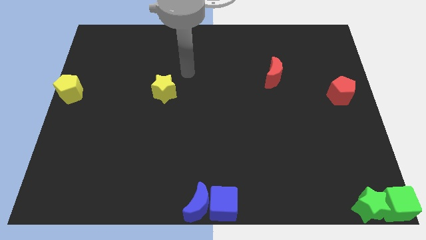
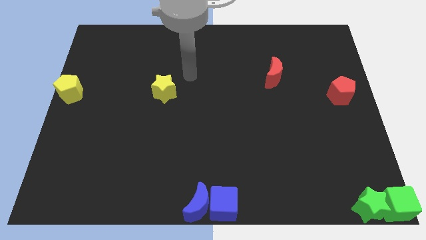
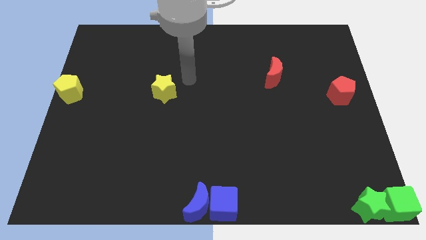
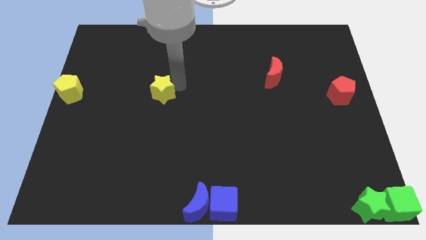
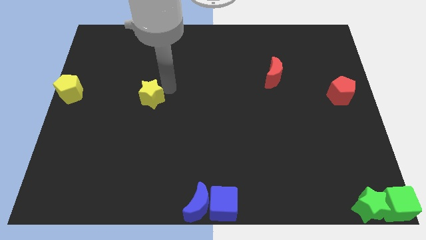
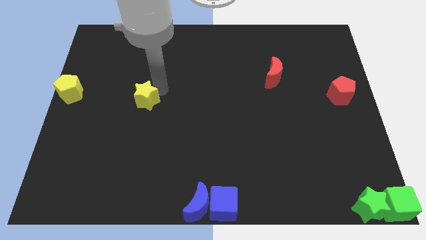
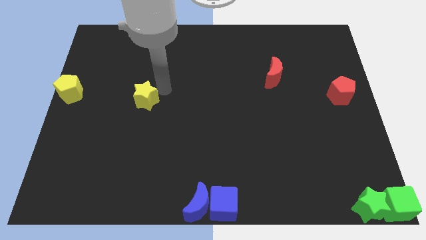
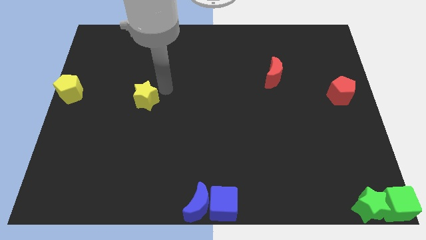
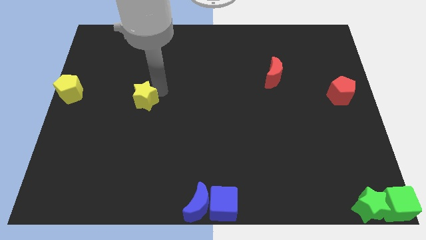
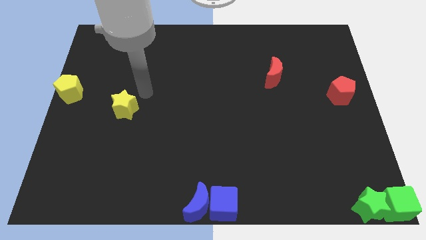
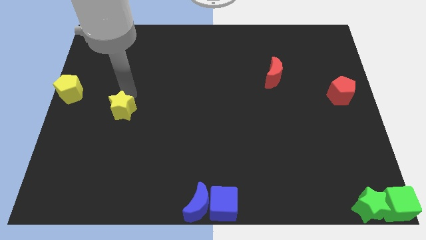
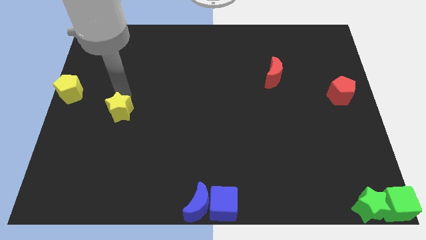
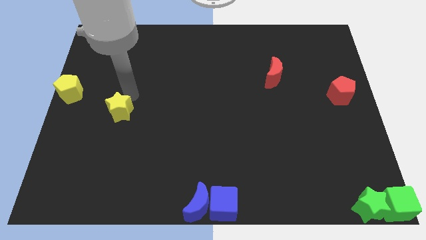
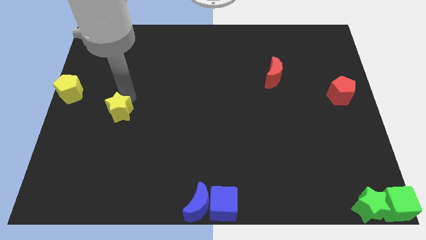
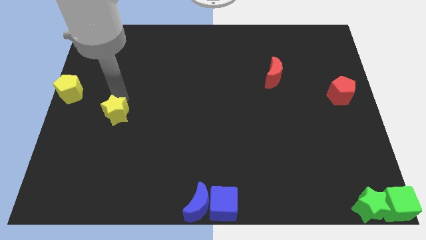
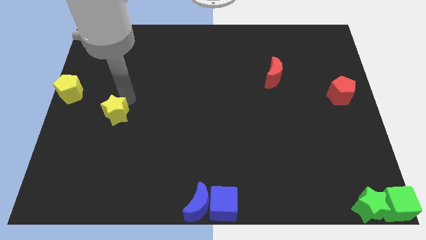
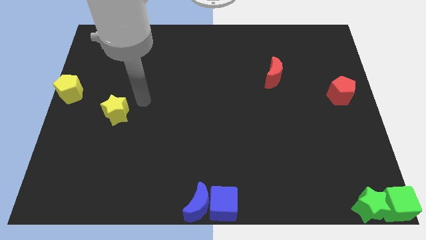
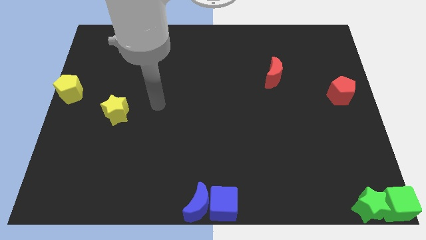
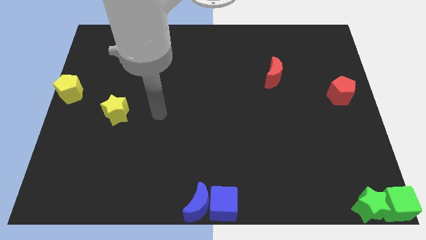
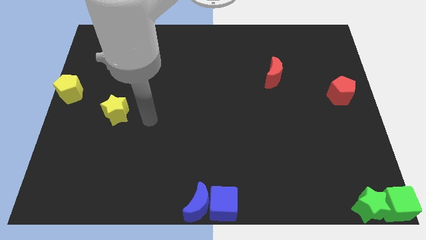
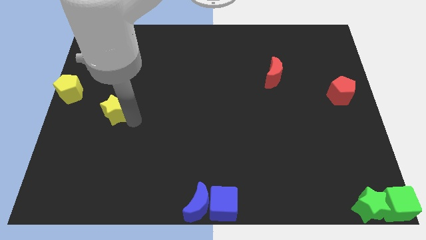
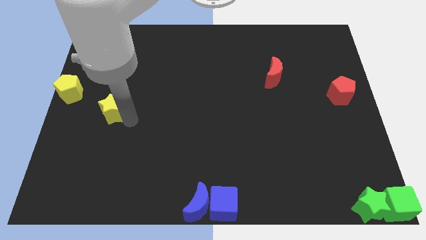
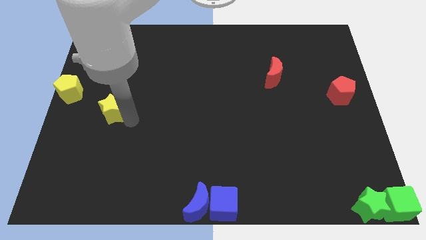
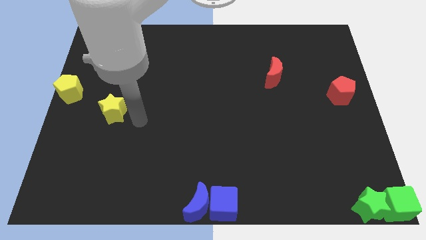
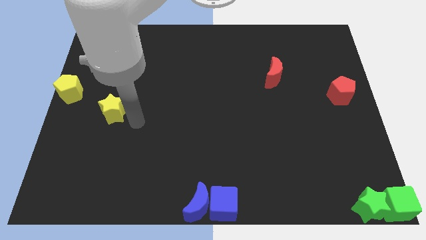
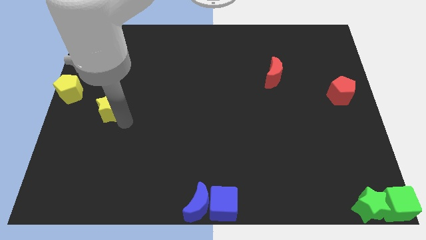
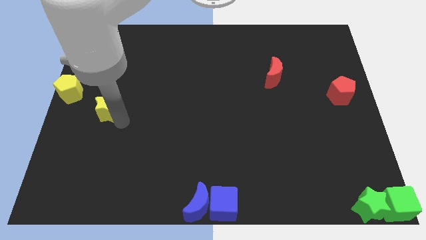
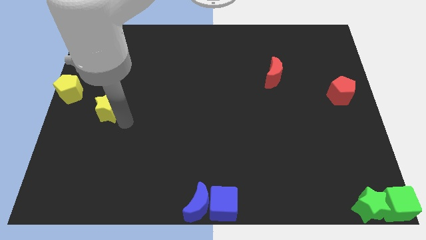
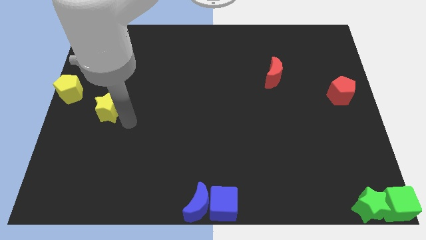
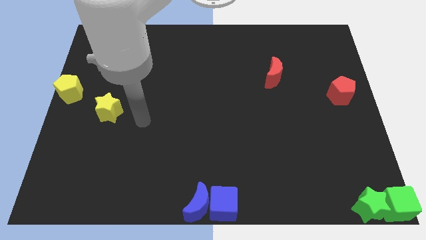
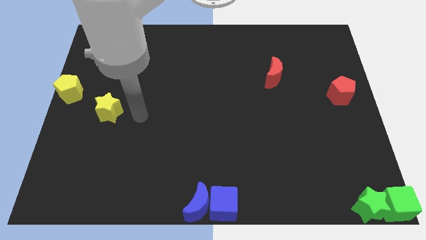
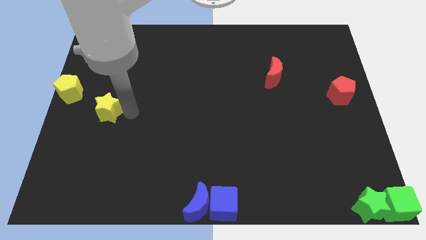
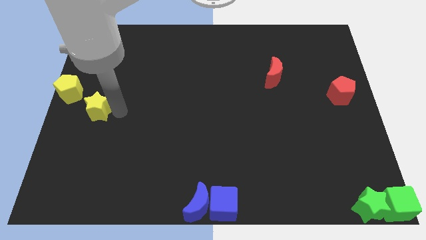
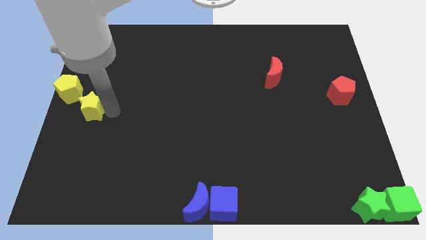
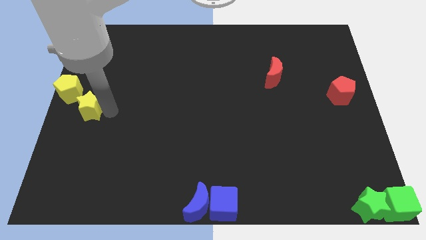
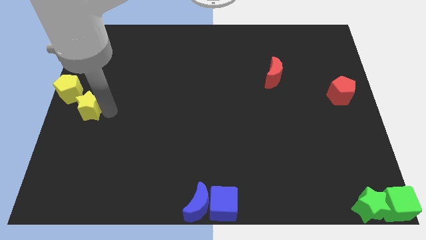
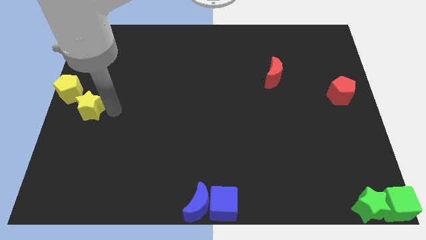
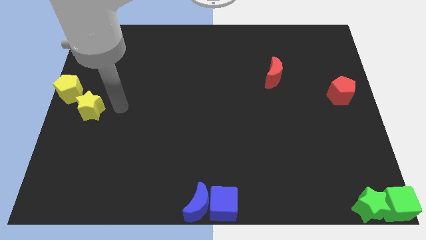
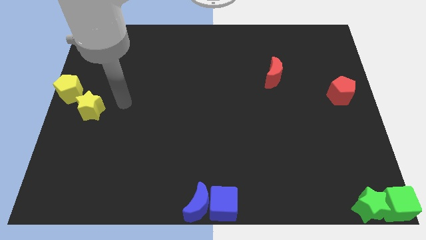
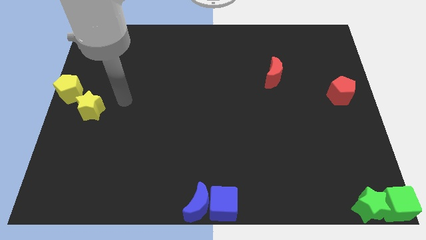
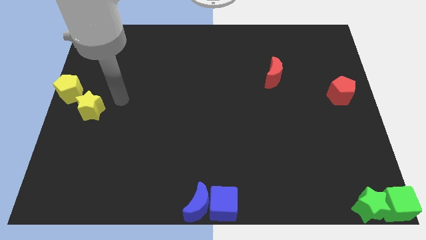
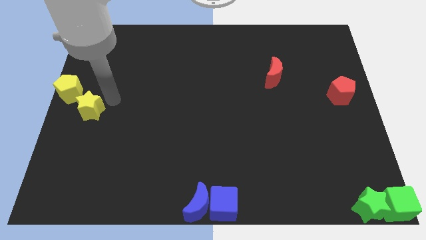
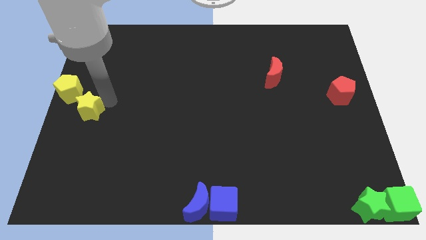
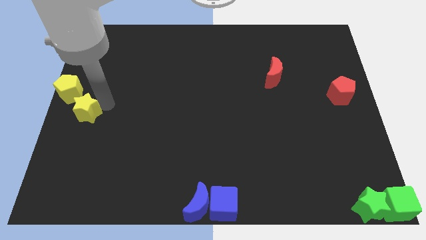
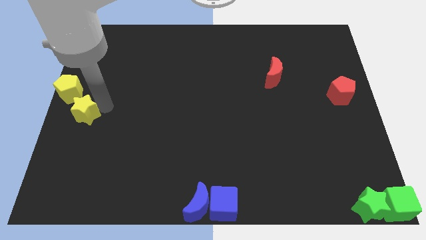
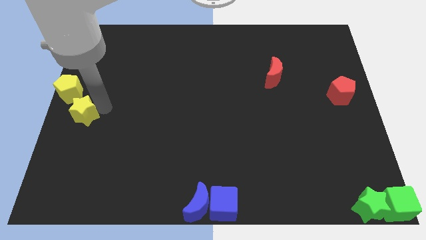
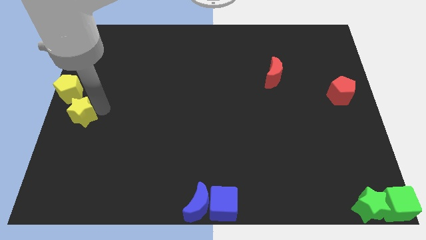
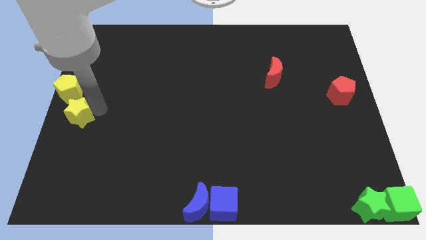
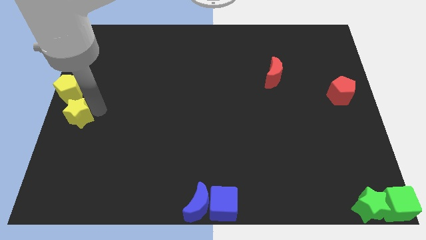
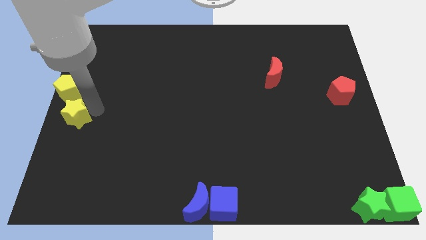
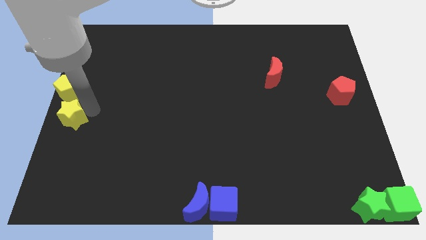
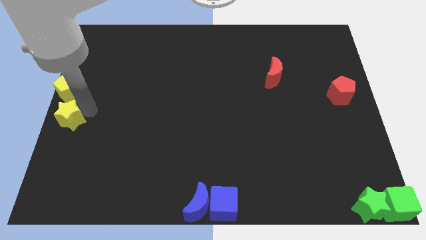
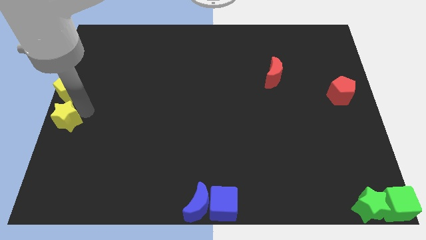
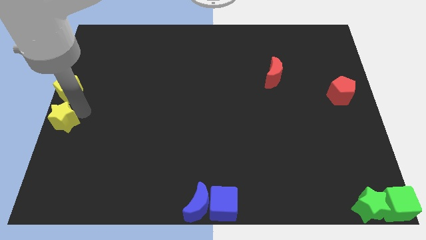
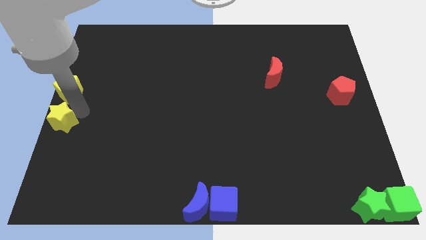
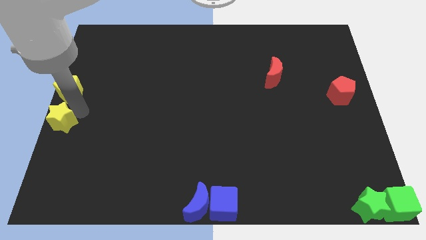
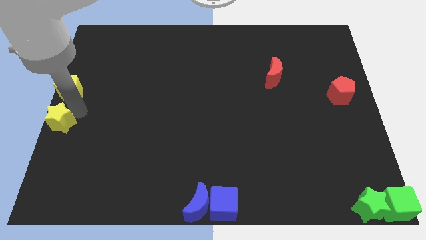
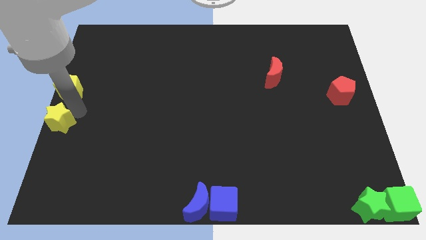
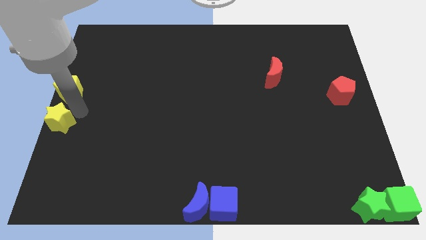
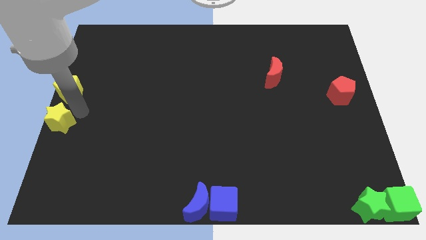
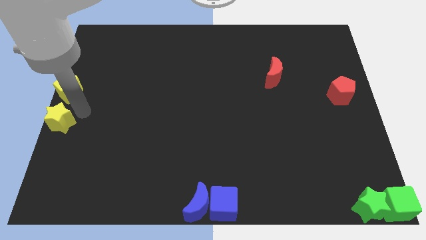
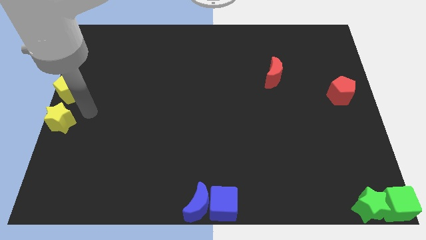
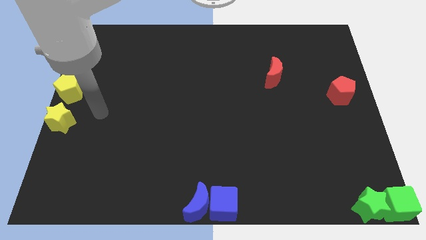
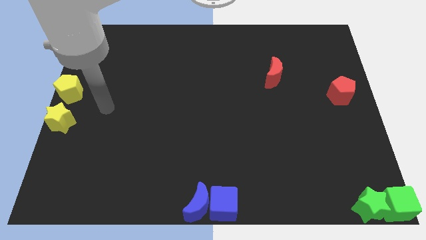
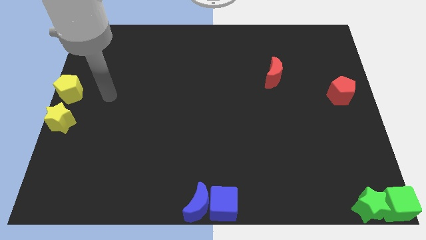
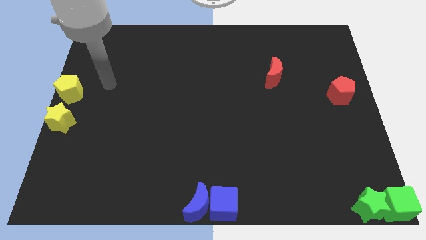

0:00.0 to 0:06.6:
push the yellow star below the yellow pentagon

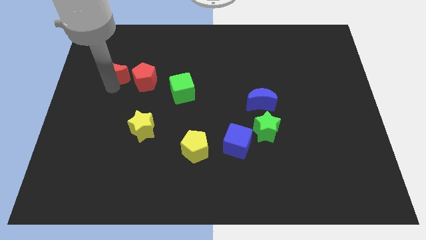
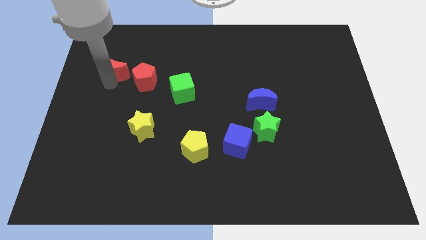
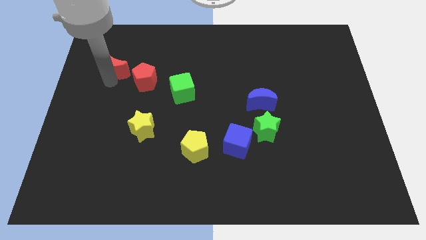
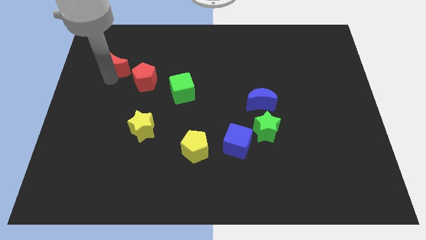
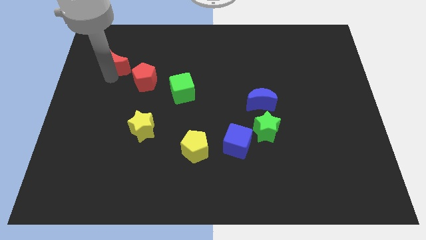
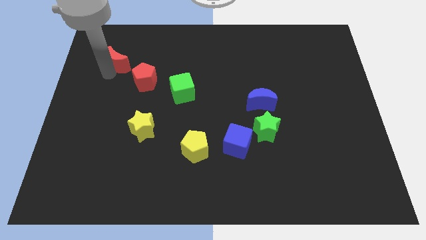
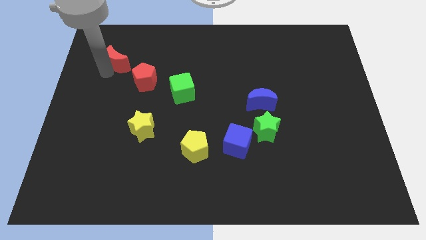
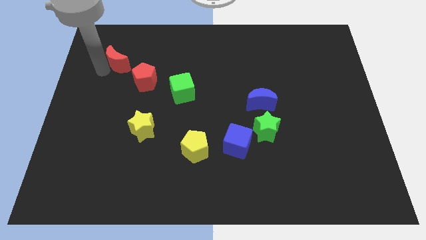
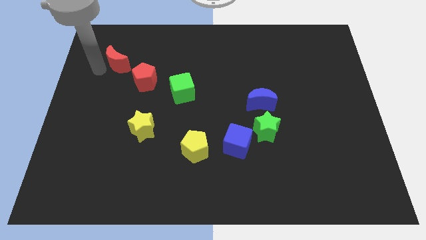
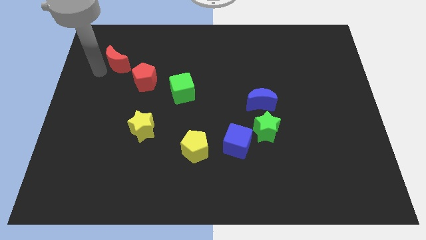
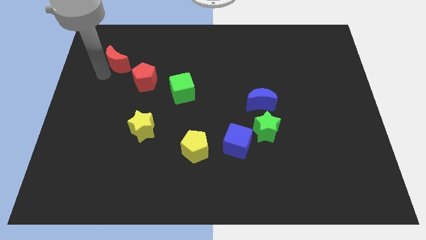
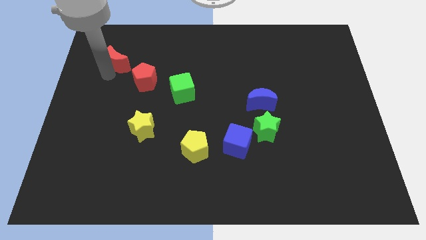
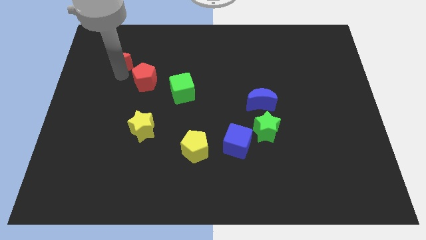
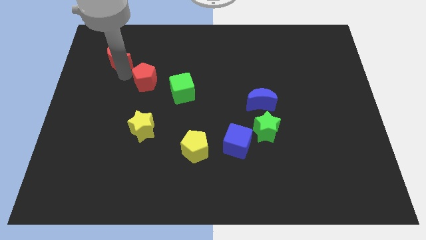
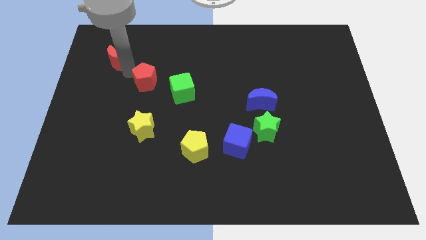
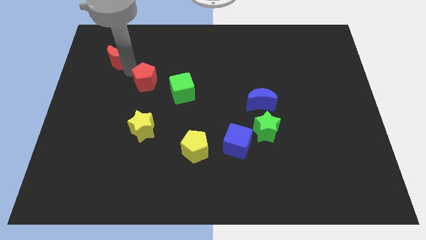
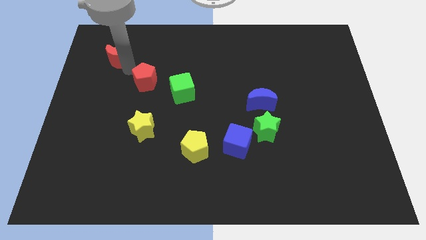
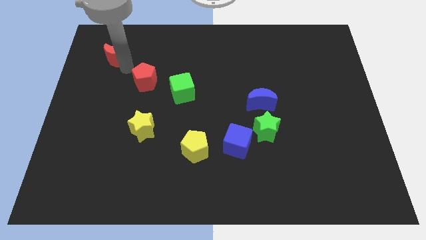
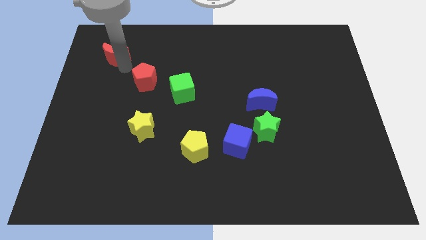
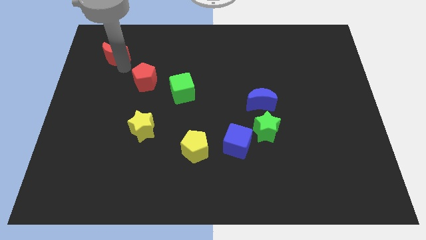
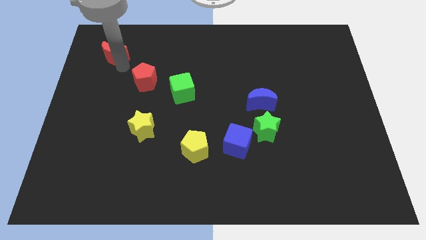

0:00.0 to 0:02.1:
push the red moon to the top side

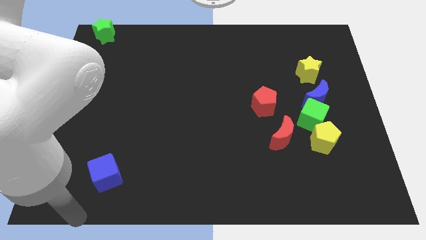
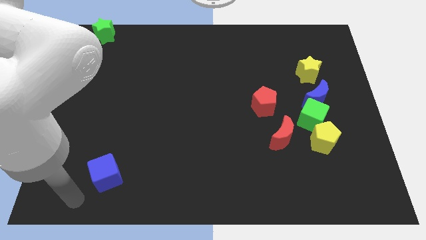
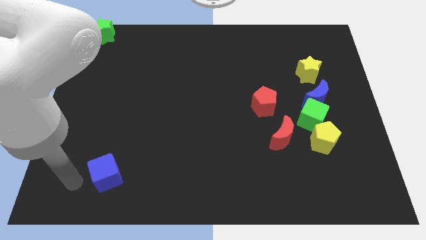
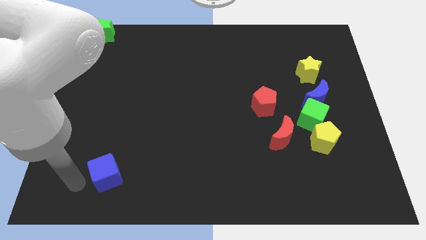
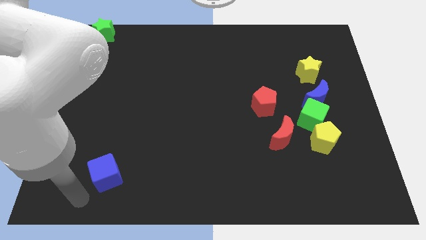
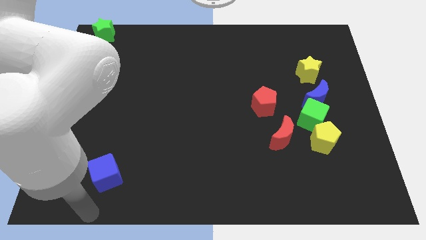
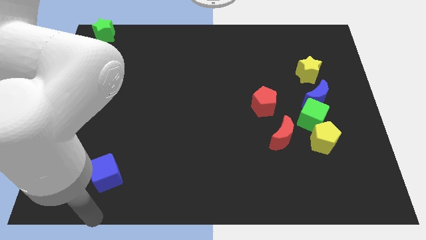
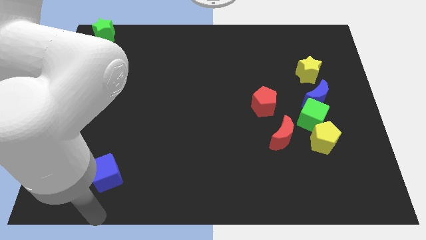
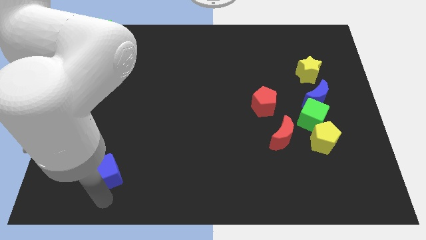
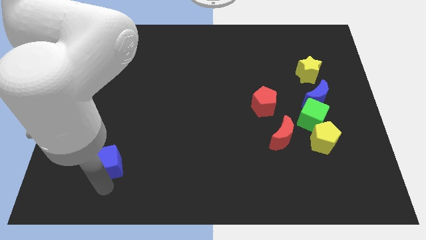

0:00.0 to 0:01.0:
touch the bottom of blue cube
